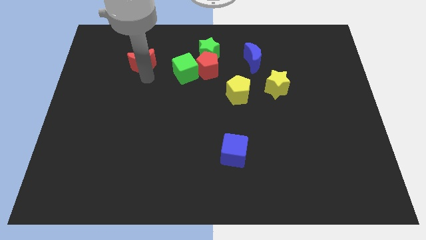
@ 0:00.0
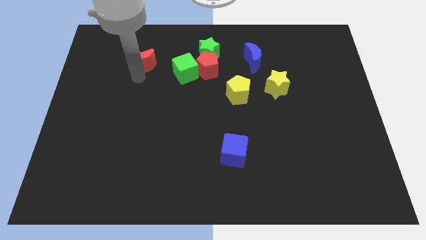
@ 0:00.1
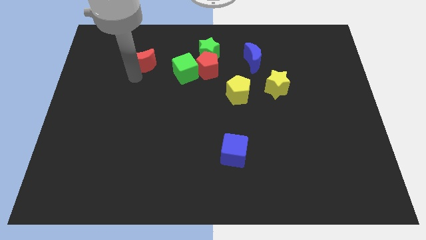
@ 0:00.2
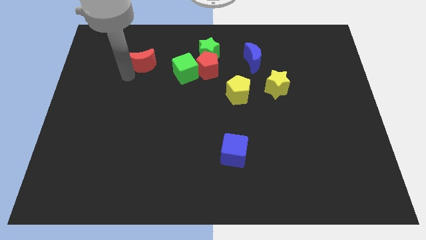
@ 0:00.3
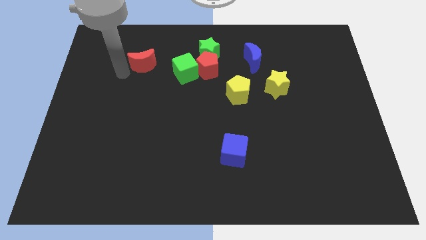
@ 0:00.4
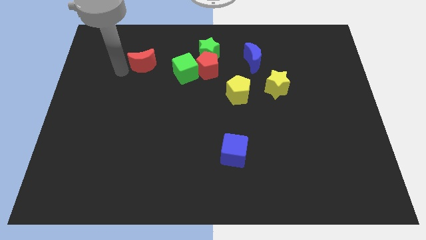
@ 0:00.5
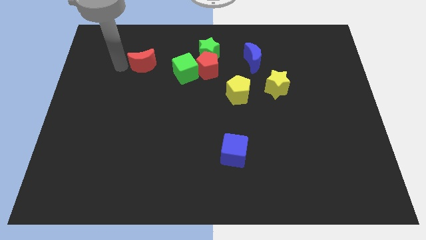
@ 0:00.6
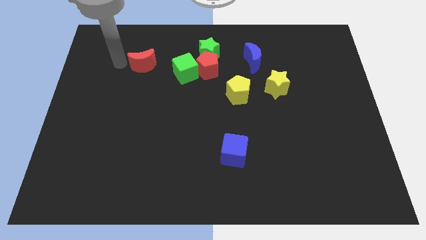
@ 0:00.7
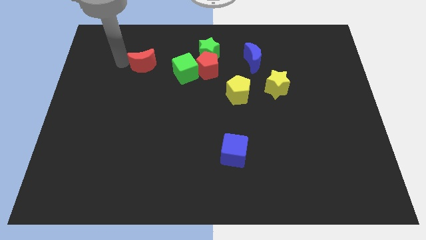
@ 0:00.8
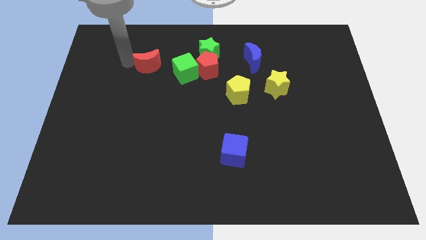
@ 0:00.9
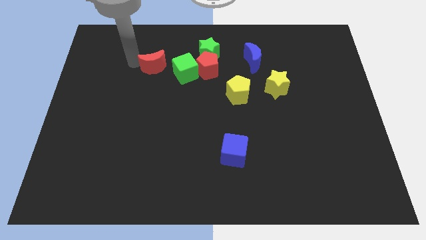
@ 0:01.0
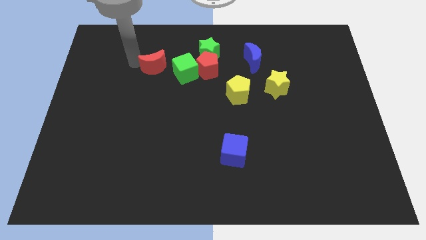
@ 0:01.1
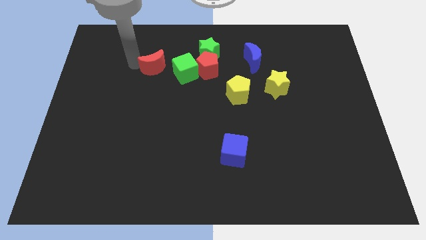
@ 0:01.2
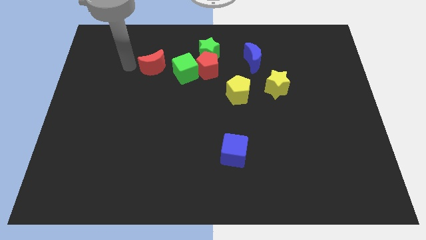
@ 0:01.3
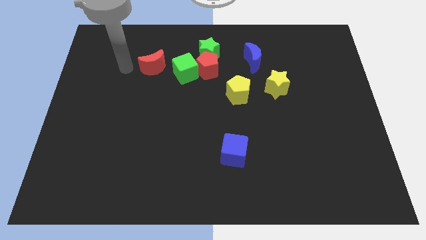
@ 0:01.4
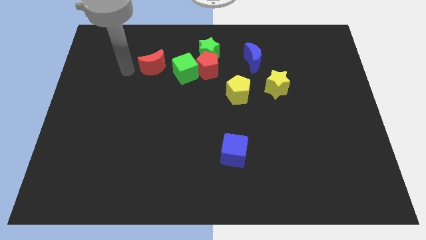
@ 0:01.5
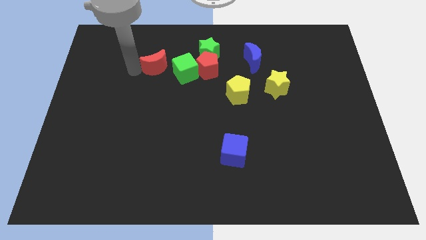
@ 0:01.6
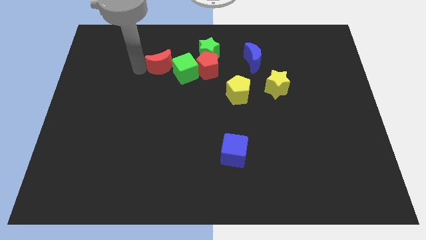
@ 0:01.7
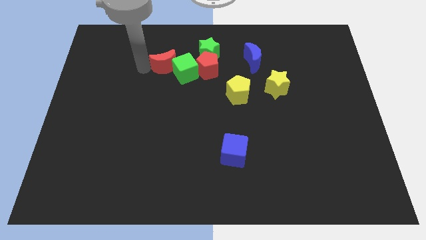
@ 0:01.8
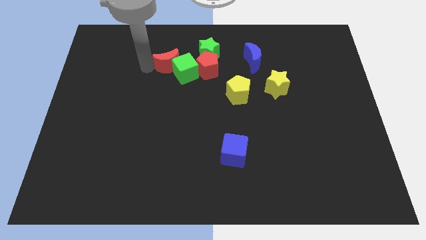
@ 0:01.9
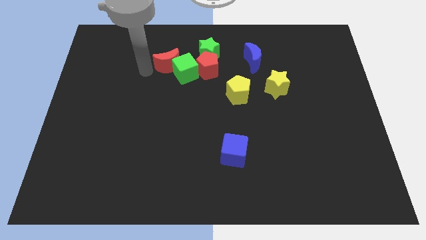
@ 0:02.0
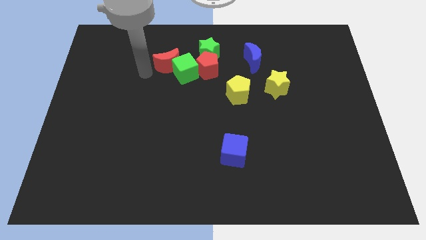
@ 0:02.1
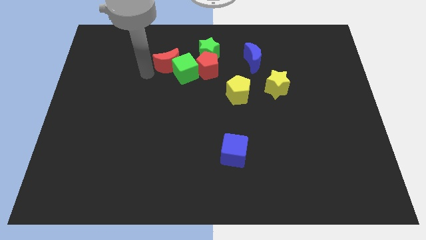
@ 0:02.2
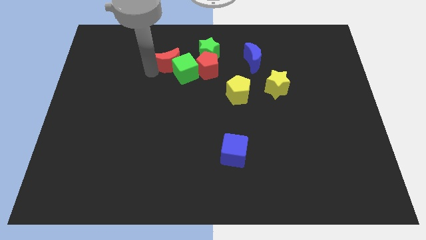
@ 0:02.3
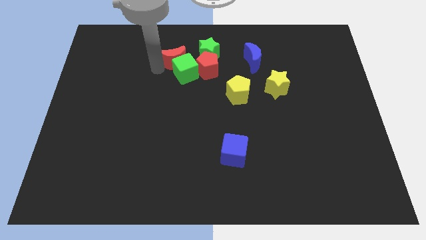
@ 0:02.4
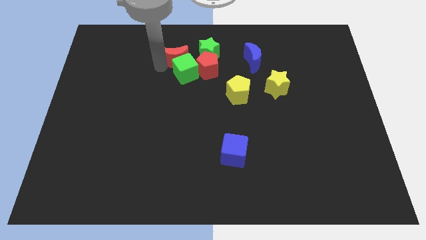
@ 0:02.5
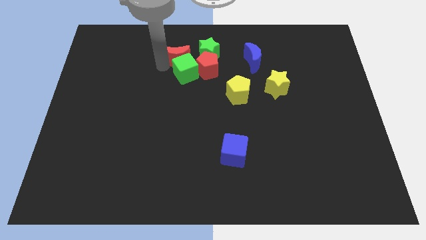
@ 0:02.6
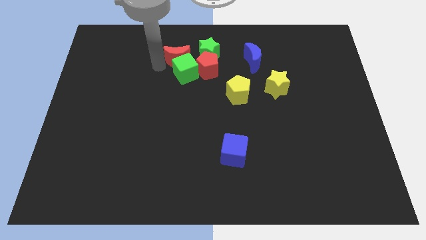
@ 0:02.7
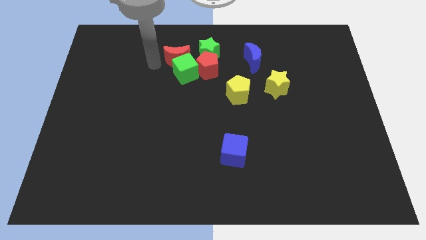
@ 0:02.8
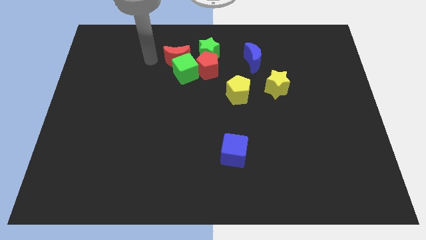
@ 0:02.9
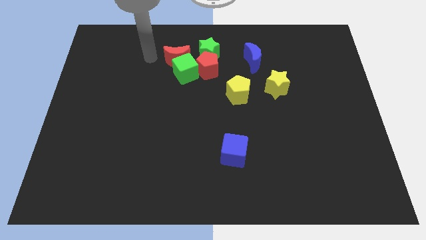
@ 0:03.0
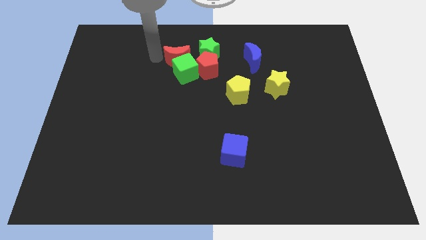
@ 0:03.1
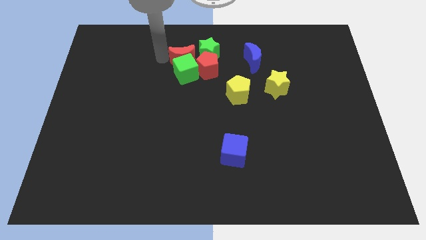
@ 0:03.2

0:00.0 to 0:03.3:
push the red crescent to the top of the green cube

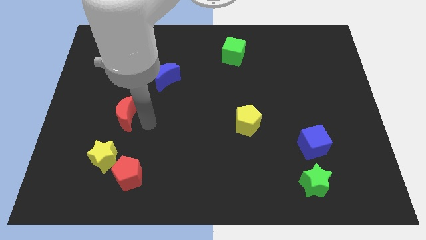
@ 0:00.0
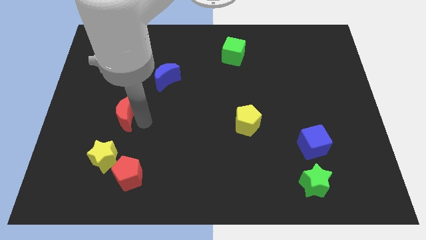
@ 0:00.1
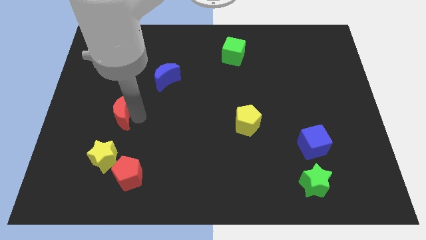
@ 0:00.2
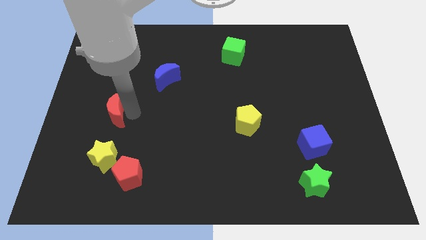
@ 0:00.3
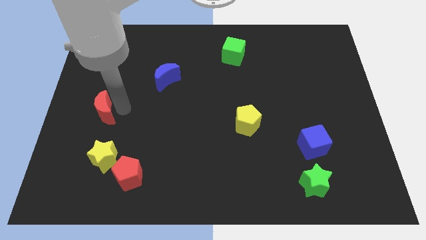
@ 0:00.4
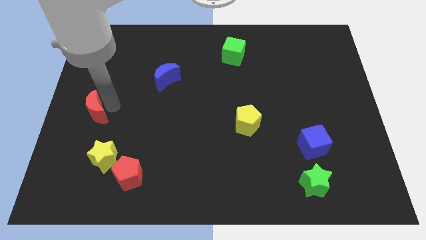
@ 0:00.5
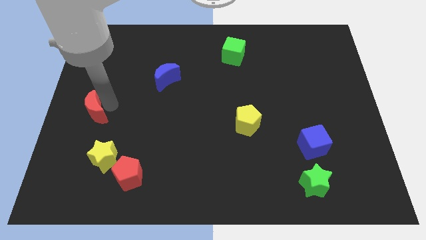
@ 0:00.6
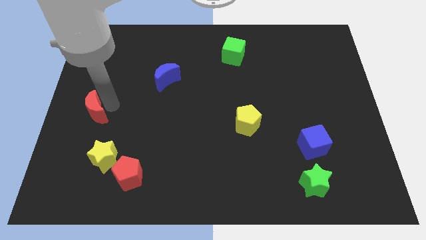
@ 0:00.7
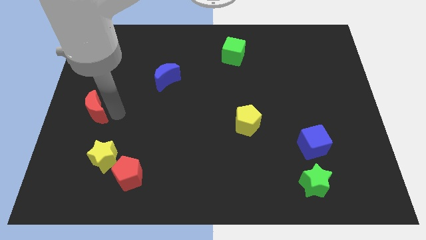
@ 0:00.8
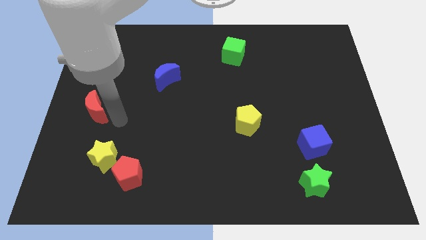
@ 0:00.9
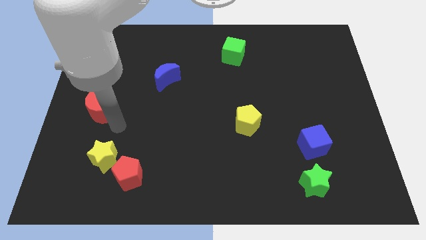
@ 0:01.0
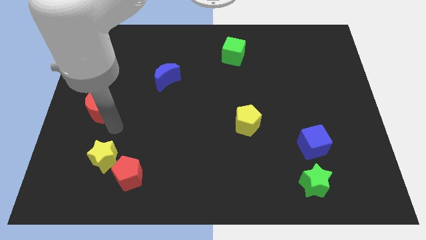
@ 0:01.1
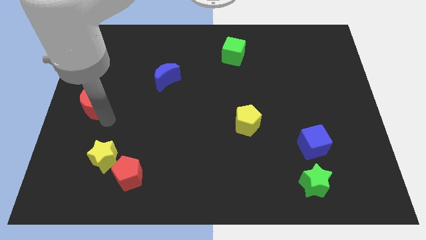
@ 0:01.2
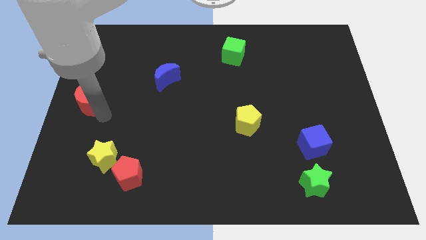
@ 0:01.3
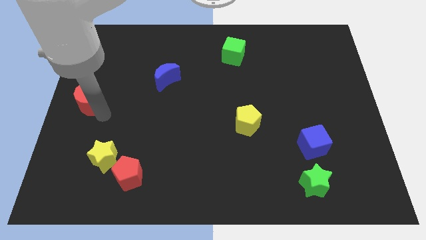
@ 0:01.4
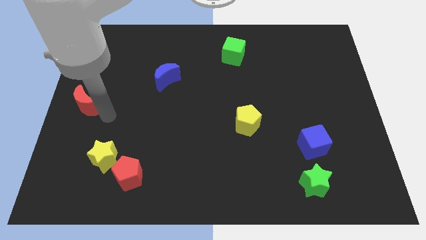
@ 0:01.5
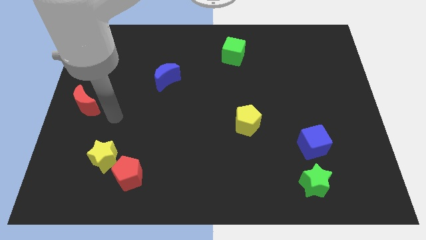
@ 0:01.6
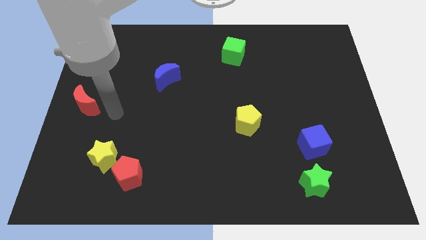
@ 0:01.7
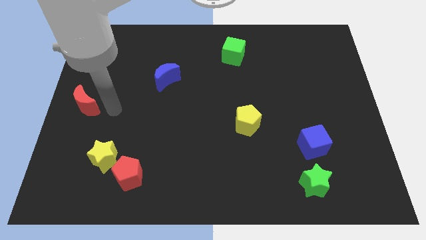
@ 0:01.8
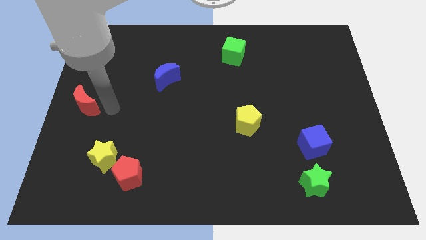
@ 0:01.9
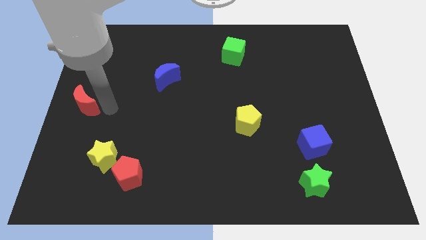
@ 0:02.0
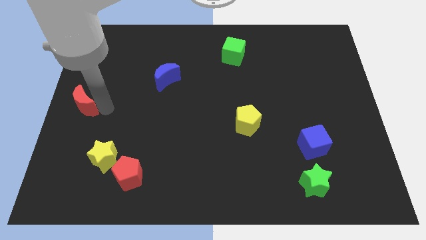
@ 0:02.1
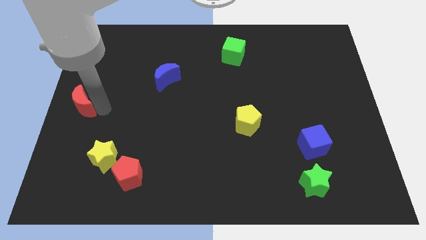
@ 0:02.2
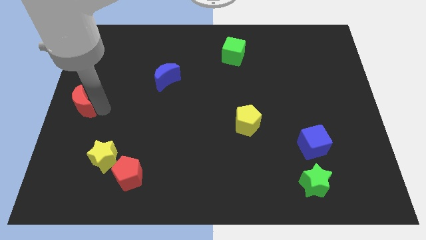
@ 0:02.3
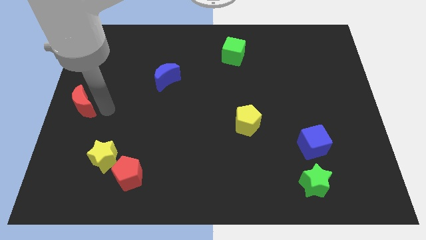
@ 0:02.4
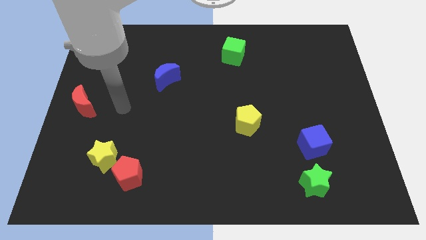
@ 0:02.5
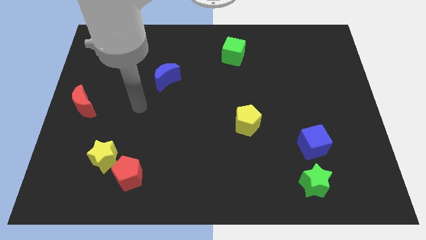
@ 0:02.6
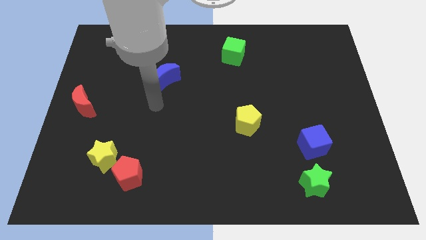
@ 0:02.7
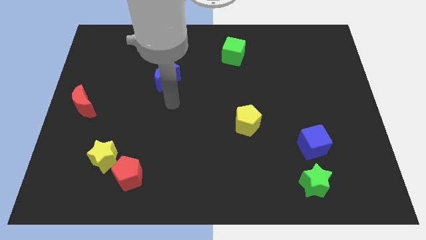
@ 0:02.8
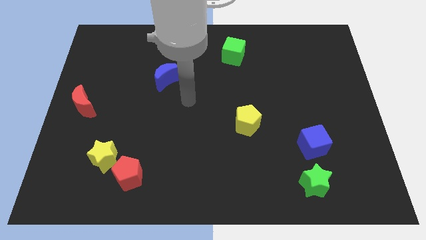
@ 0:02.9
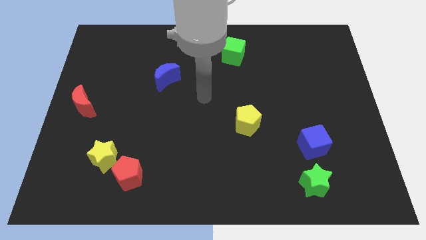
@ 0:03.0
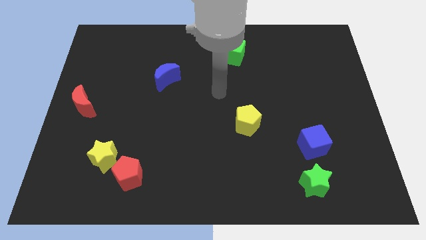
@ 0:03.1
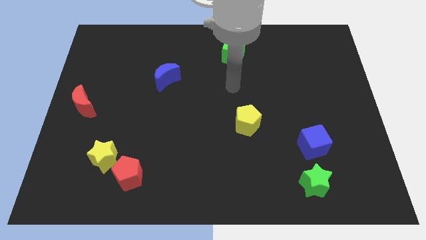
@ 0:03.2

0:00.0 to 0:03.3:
move the red moon to the center left of the board

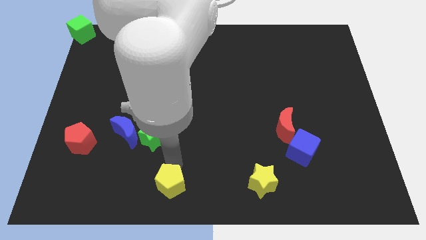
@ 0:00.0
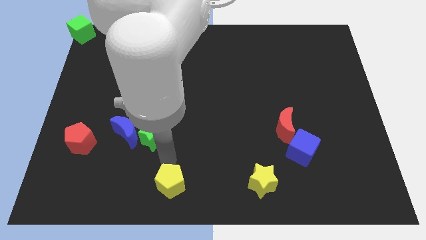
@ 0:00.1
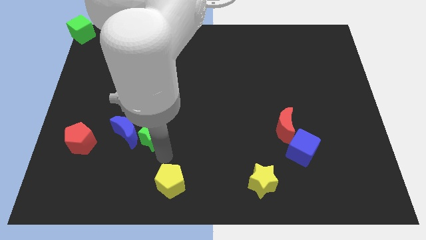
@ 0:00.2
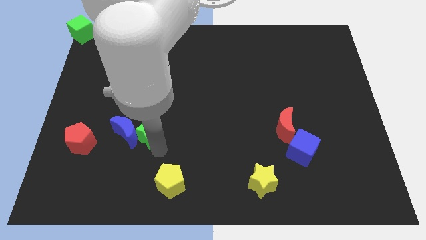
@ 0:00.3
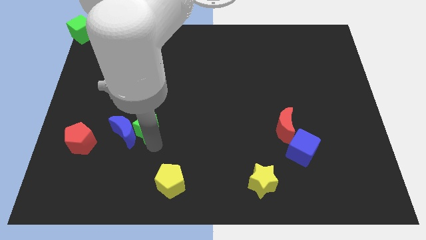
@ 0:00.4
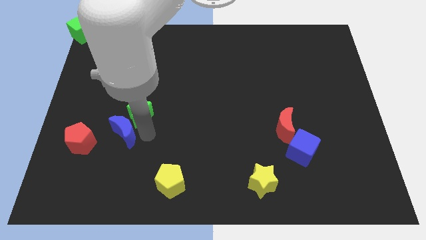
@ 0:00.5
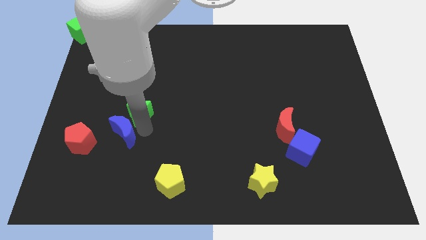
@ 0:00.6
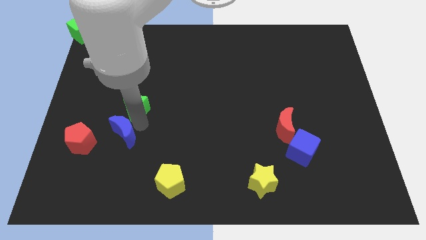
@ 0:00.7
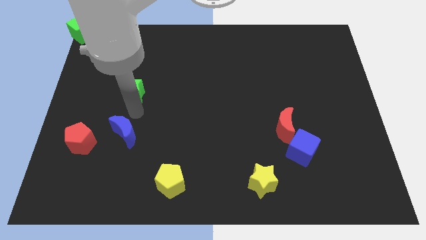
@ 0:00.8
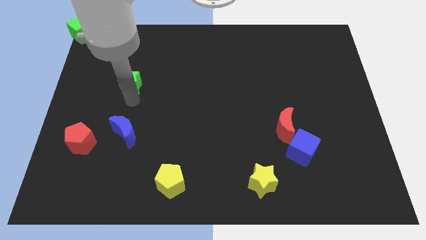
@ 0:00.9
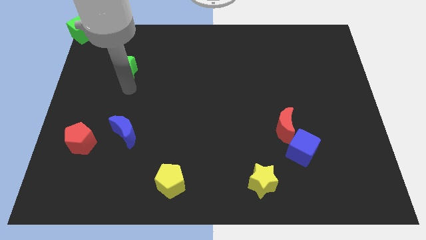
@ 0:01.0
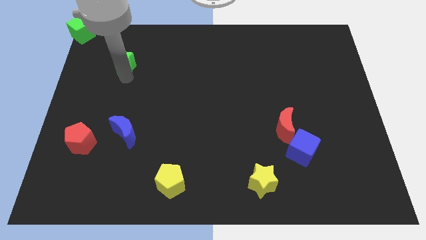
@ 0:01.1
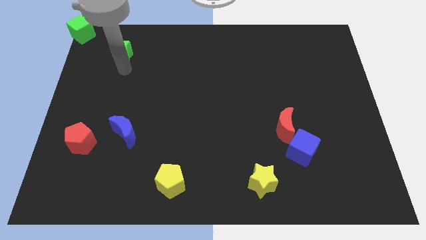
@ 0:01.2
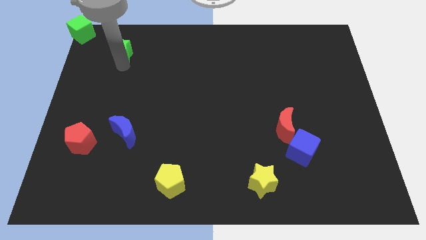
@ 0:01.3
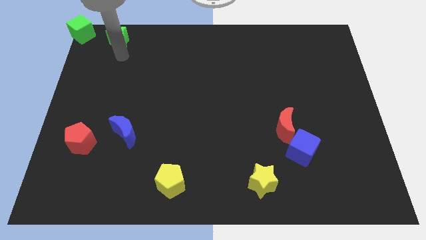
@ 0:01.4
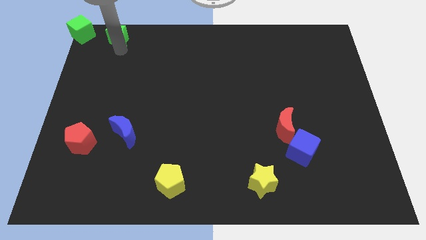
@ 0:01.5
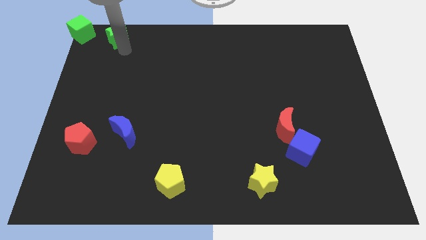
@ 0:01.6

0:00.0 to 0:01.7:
place the green star to the right of green cube

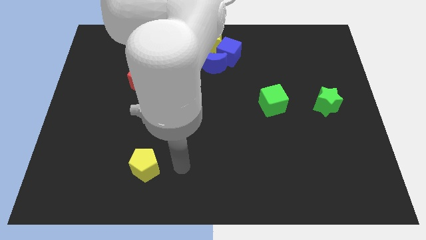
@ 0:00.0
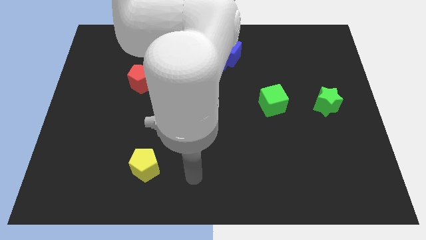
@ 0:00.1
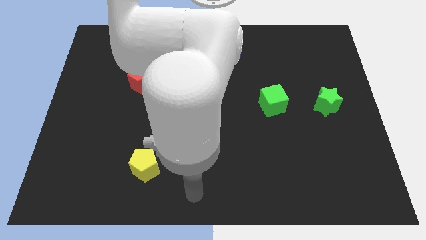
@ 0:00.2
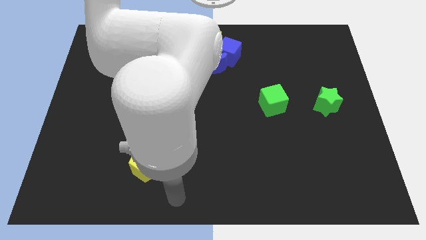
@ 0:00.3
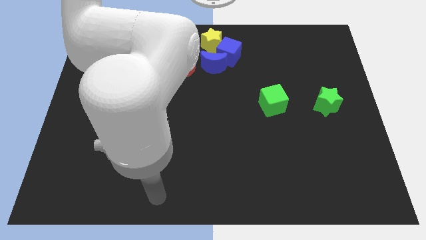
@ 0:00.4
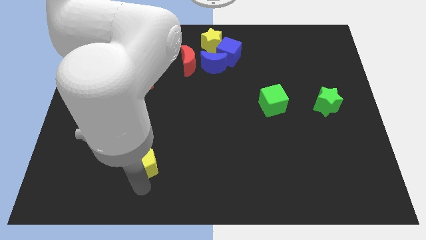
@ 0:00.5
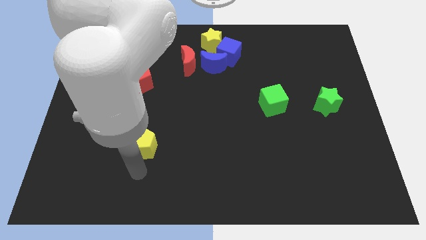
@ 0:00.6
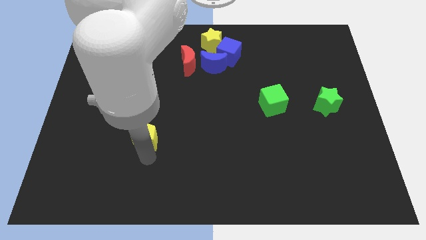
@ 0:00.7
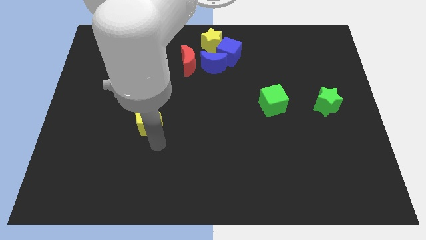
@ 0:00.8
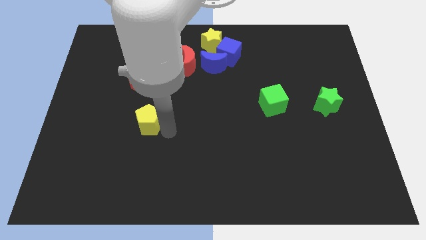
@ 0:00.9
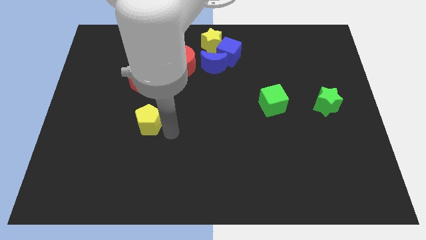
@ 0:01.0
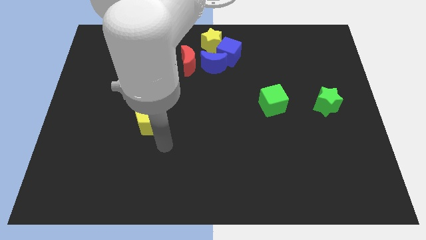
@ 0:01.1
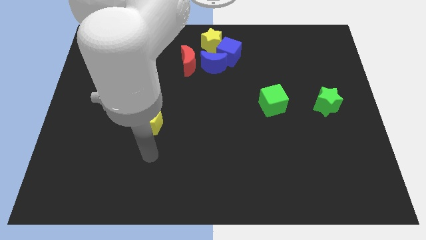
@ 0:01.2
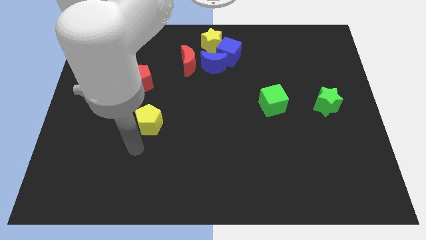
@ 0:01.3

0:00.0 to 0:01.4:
push the yellow pentagon slightly to the top
